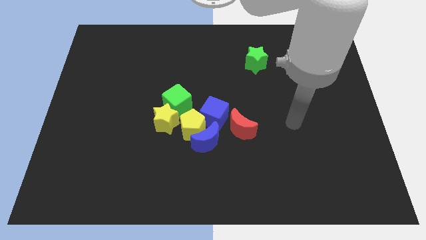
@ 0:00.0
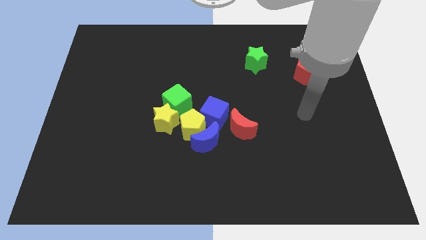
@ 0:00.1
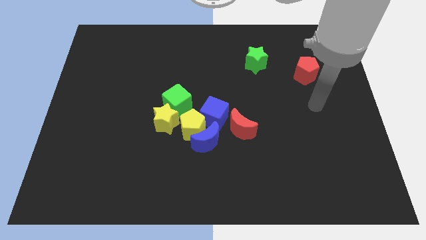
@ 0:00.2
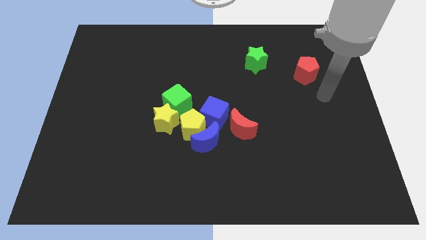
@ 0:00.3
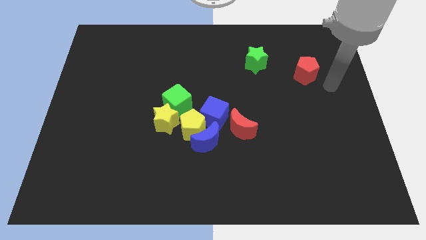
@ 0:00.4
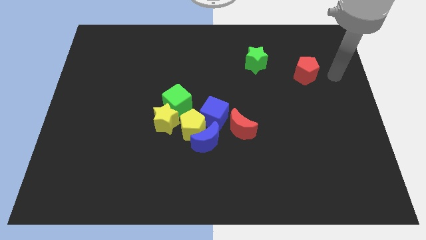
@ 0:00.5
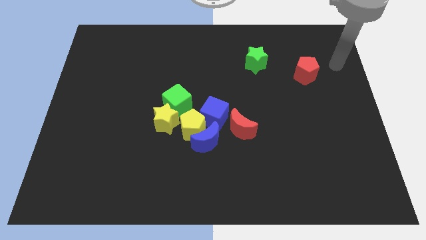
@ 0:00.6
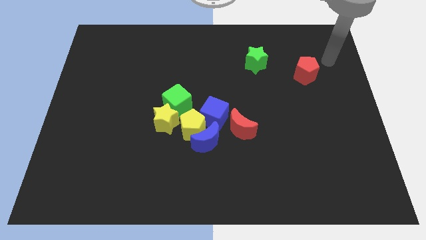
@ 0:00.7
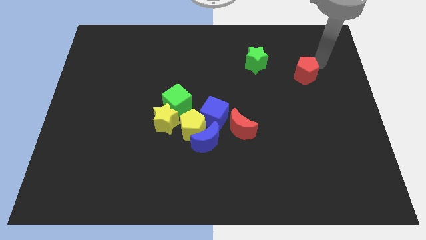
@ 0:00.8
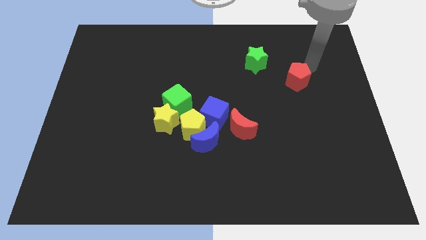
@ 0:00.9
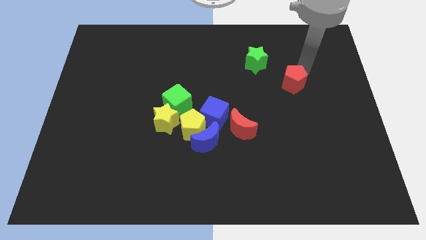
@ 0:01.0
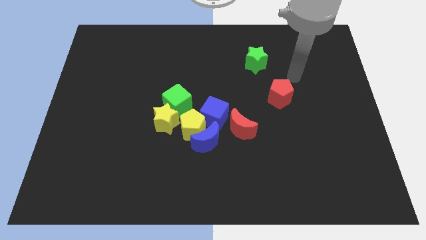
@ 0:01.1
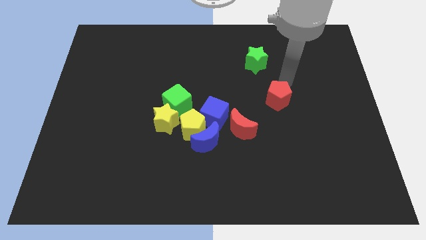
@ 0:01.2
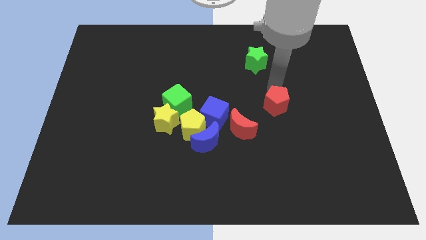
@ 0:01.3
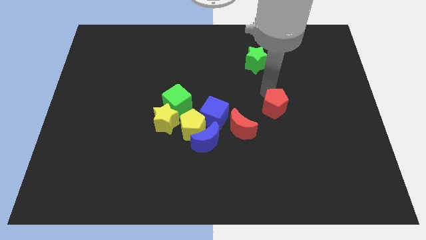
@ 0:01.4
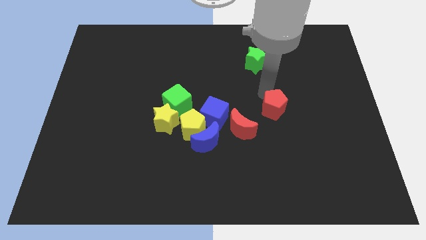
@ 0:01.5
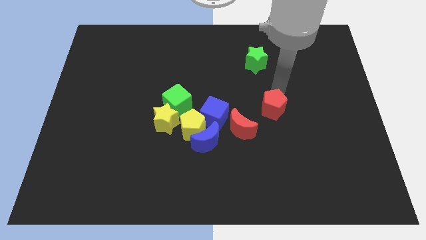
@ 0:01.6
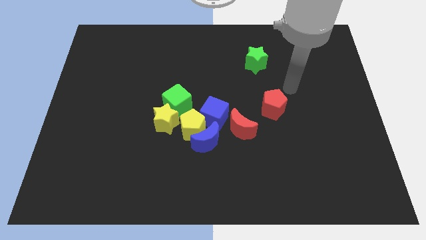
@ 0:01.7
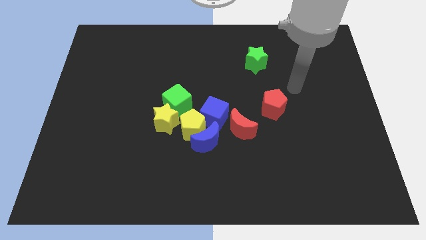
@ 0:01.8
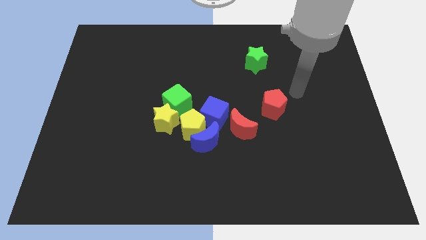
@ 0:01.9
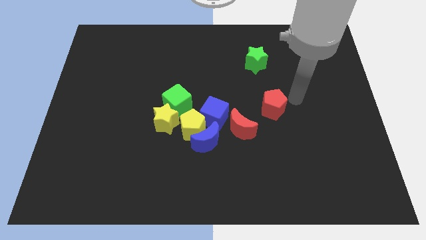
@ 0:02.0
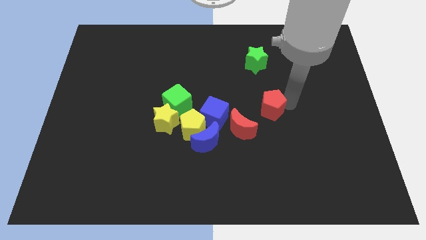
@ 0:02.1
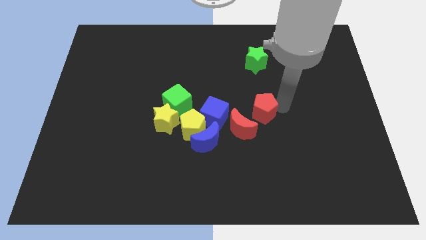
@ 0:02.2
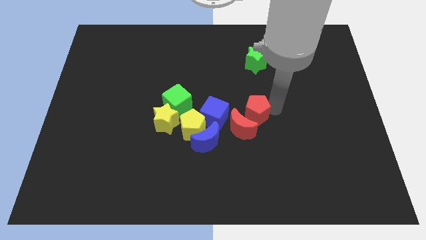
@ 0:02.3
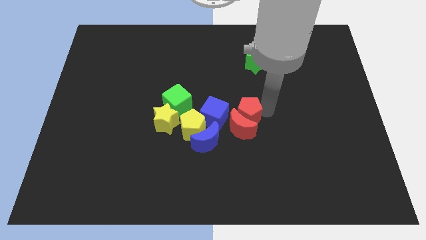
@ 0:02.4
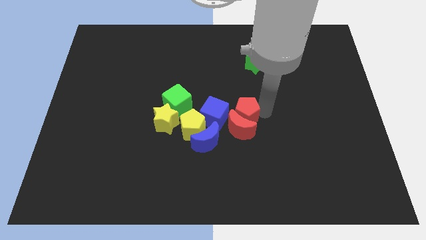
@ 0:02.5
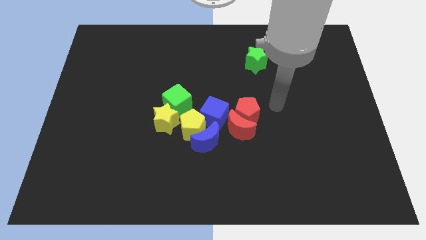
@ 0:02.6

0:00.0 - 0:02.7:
push the red pentagon into the red crescent

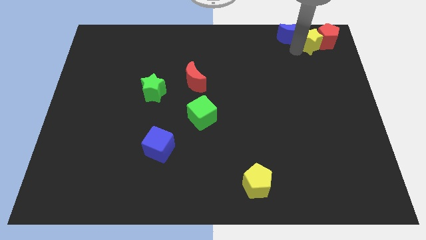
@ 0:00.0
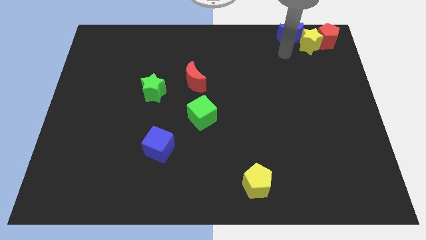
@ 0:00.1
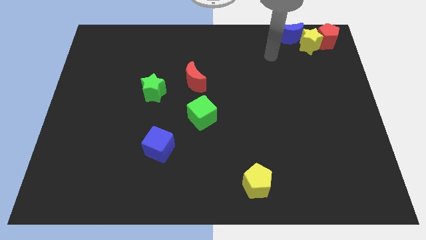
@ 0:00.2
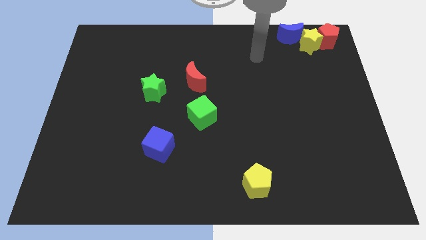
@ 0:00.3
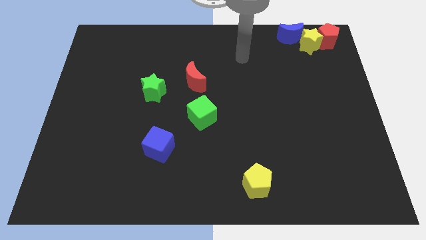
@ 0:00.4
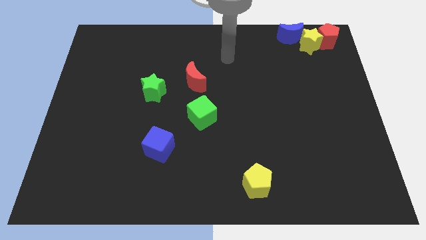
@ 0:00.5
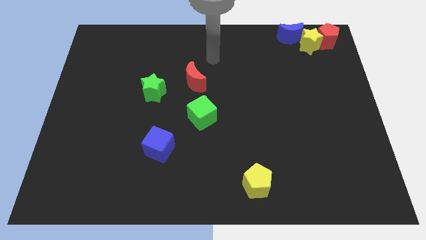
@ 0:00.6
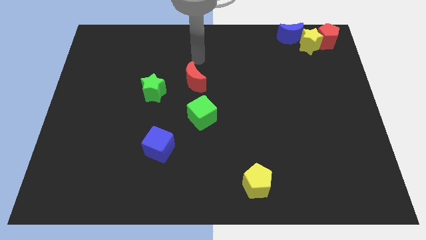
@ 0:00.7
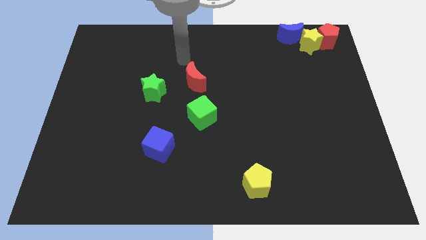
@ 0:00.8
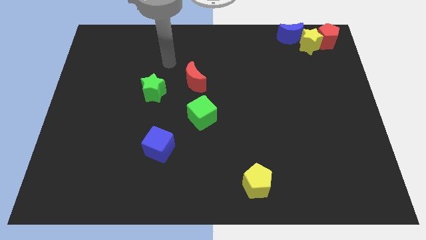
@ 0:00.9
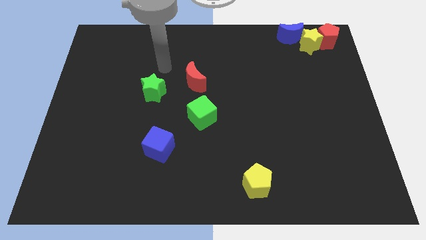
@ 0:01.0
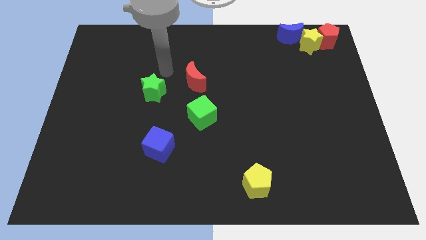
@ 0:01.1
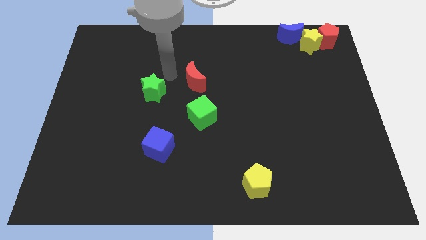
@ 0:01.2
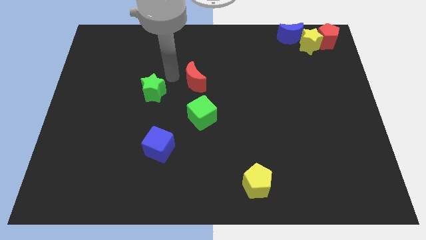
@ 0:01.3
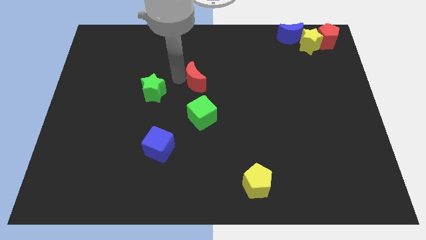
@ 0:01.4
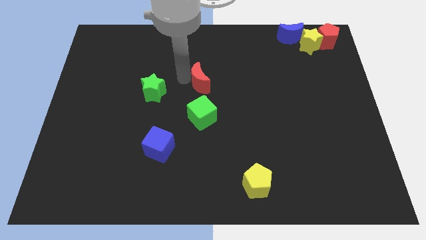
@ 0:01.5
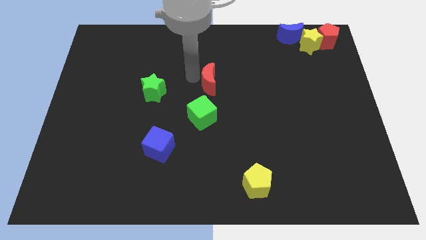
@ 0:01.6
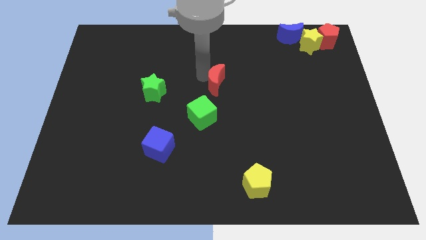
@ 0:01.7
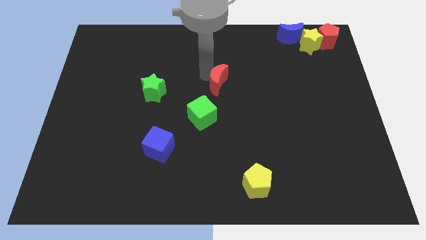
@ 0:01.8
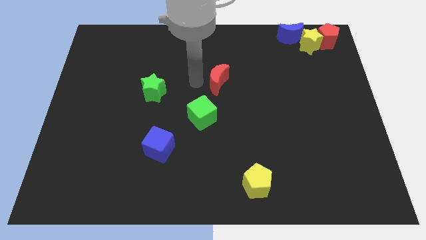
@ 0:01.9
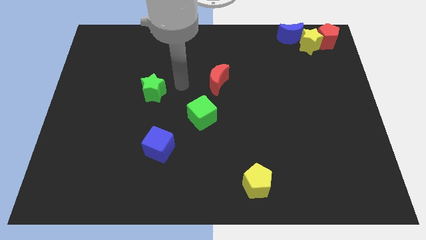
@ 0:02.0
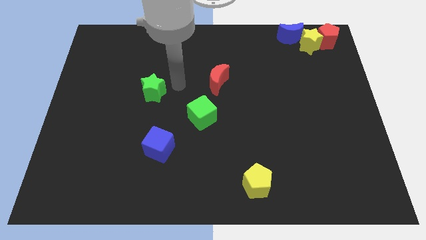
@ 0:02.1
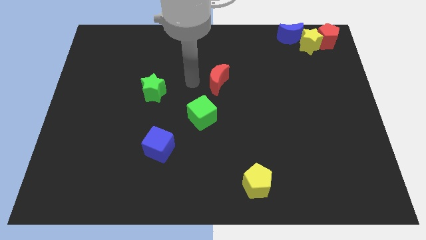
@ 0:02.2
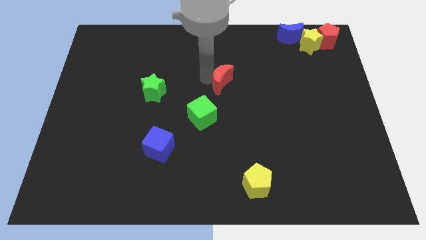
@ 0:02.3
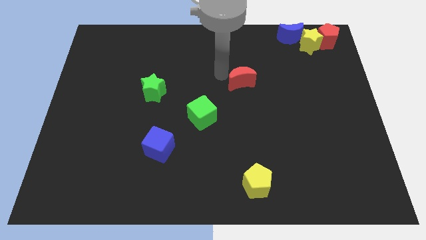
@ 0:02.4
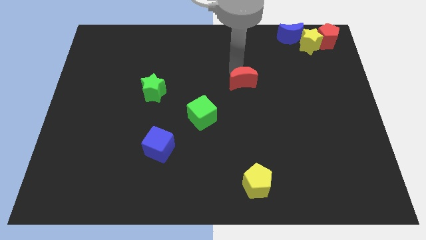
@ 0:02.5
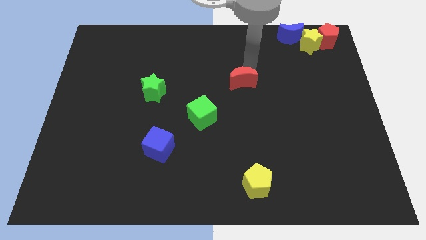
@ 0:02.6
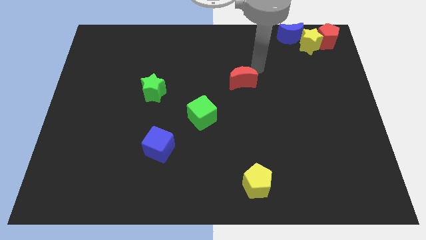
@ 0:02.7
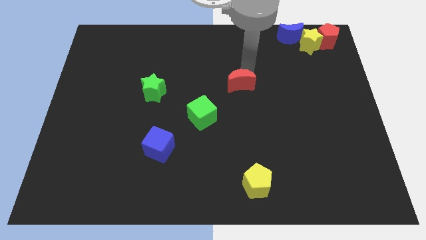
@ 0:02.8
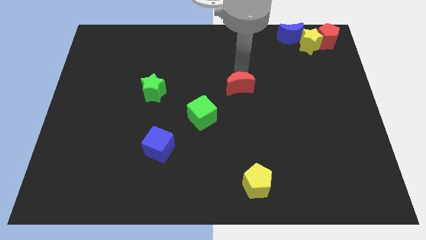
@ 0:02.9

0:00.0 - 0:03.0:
place red crescent above yellow pentagon

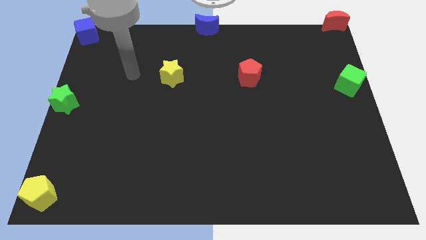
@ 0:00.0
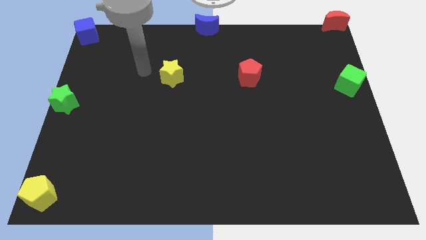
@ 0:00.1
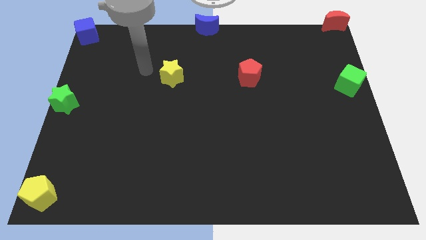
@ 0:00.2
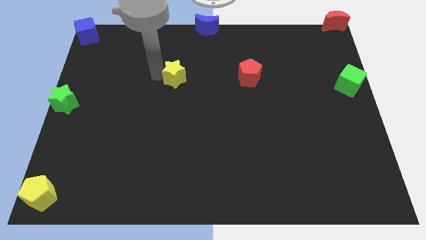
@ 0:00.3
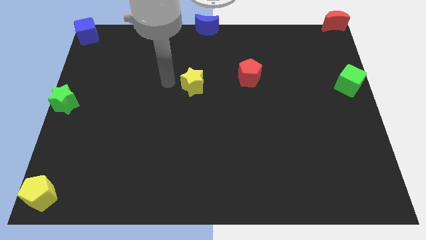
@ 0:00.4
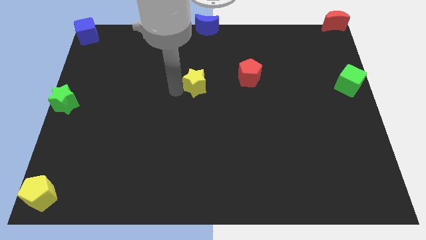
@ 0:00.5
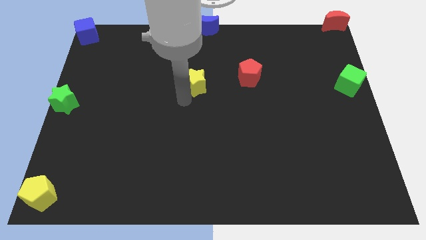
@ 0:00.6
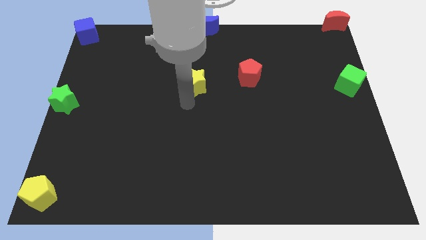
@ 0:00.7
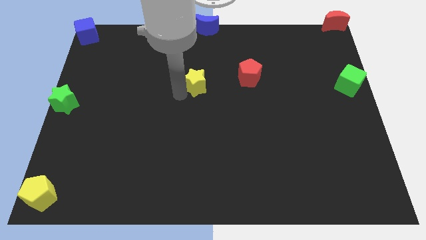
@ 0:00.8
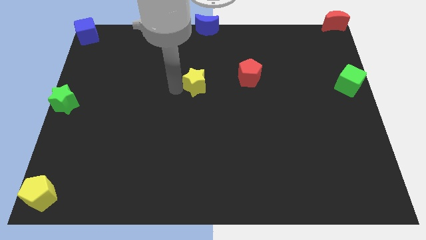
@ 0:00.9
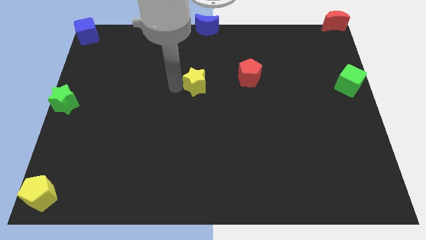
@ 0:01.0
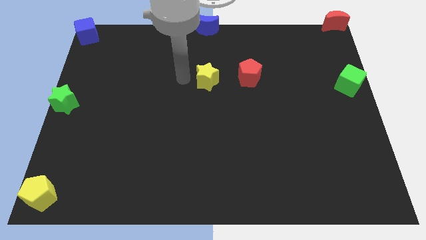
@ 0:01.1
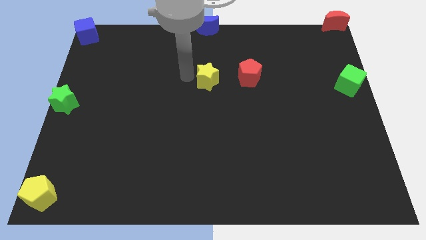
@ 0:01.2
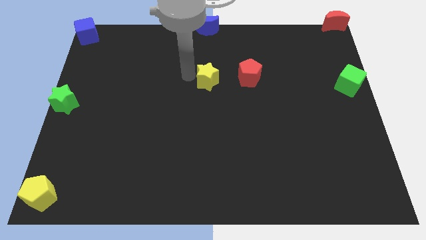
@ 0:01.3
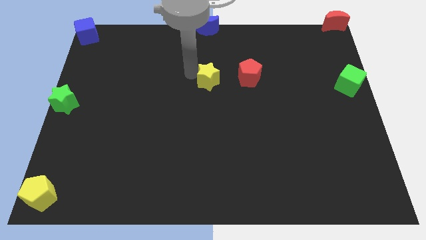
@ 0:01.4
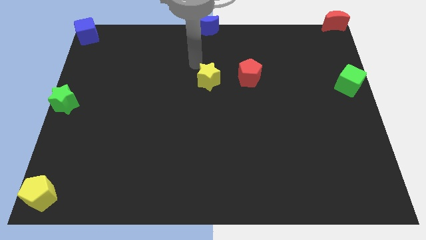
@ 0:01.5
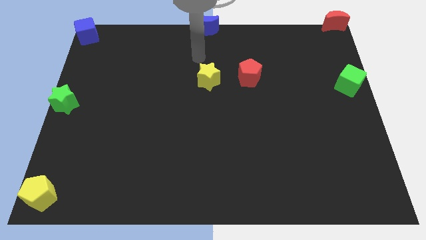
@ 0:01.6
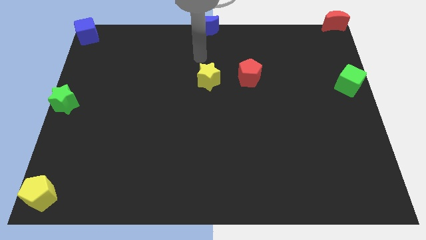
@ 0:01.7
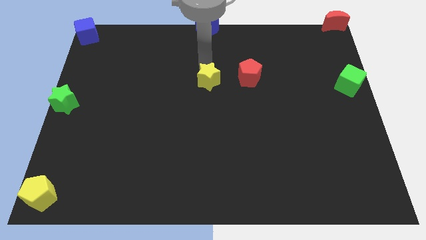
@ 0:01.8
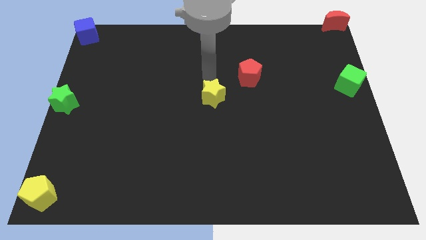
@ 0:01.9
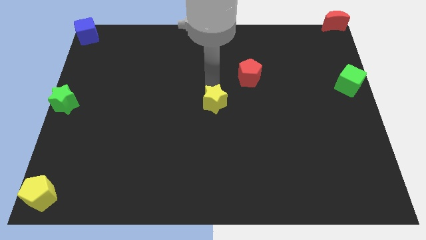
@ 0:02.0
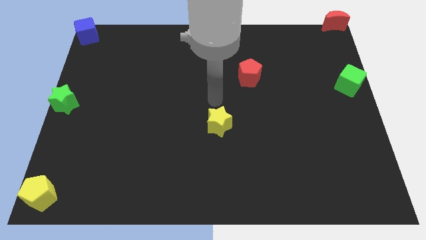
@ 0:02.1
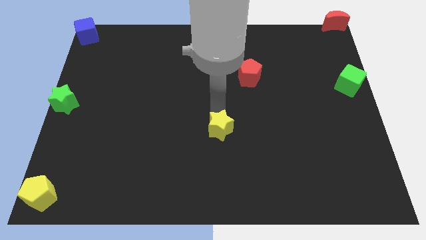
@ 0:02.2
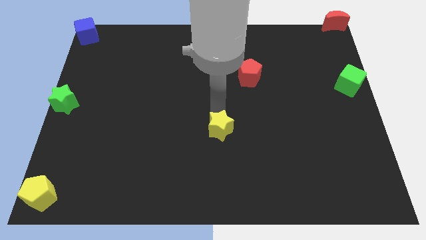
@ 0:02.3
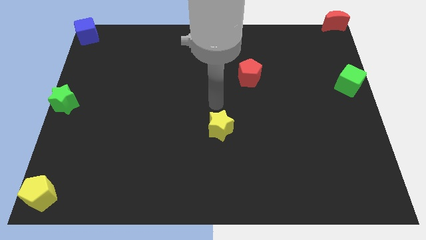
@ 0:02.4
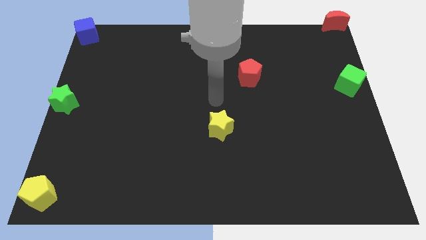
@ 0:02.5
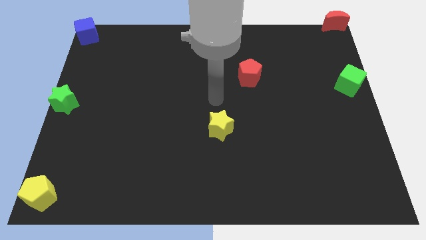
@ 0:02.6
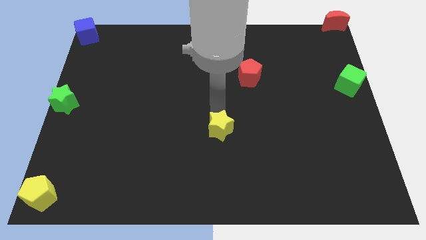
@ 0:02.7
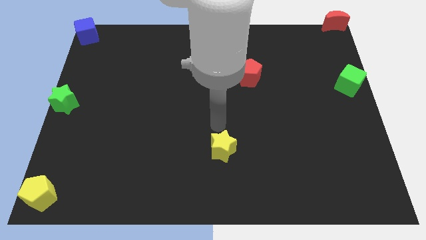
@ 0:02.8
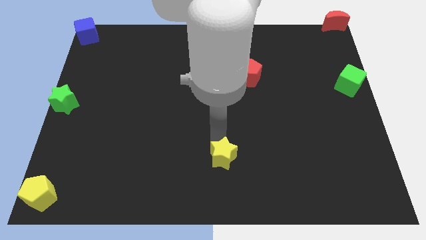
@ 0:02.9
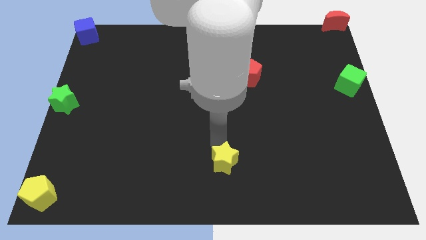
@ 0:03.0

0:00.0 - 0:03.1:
push the yellow star towards the bottom center of the board
